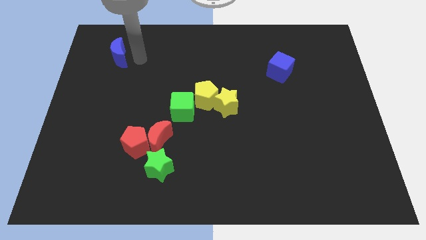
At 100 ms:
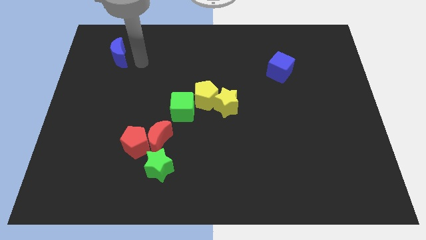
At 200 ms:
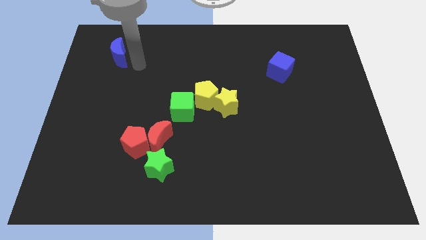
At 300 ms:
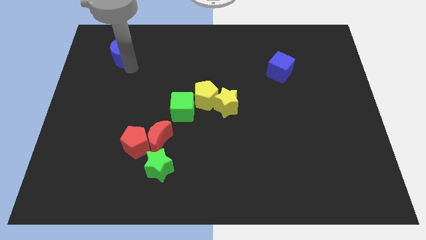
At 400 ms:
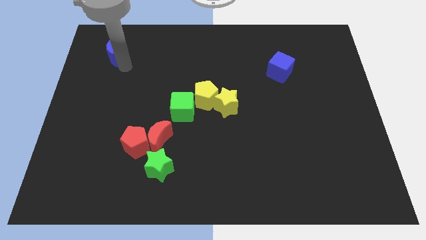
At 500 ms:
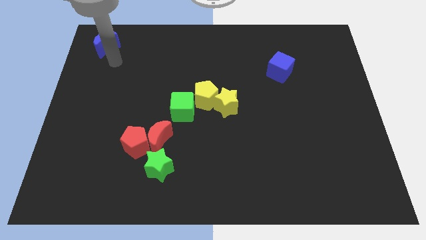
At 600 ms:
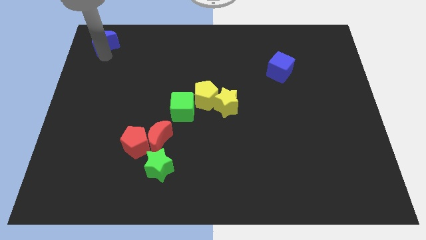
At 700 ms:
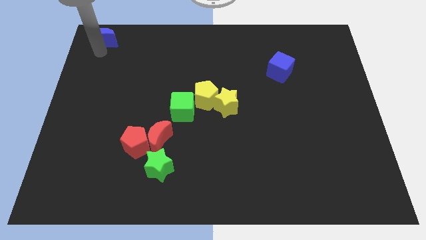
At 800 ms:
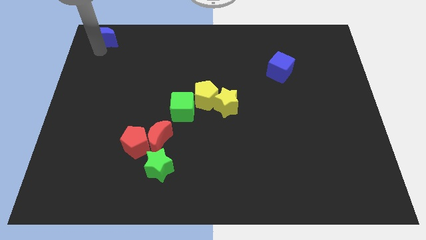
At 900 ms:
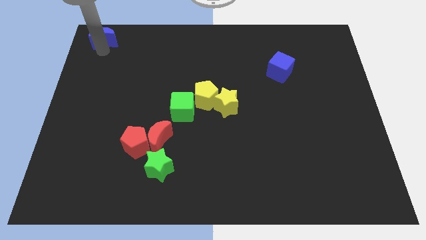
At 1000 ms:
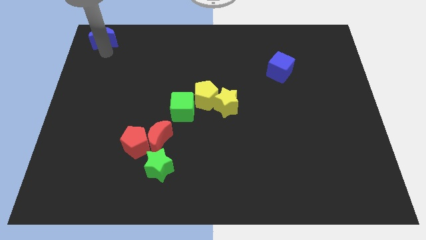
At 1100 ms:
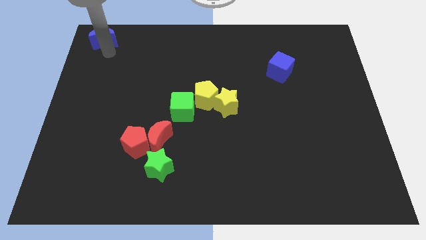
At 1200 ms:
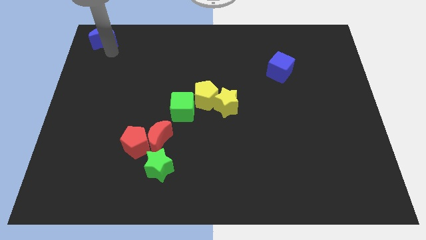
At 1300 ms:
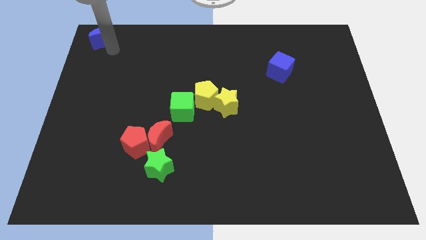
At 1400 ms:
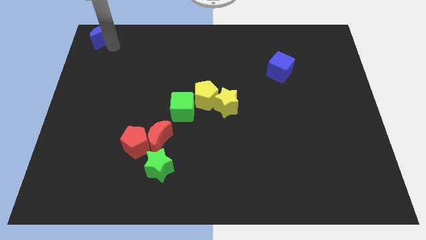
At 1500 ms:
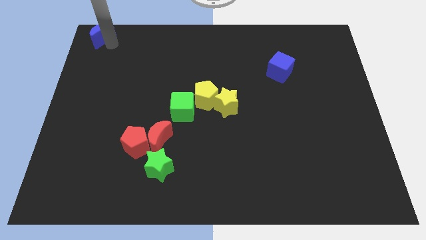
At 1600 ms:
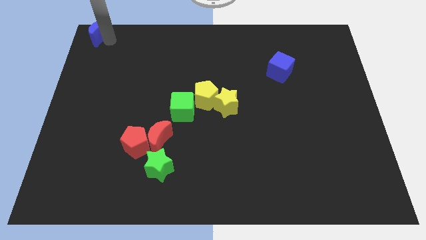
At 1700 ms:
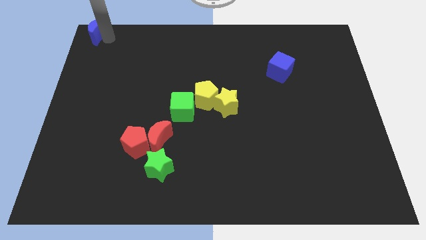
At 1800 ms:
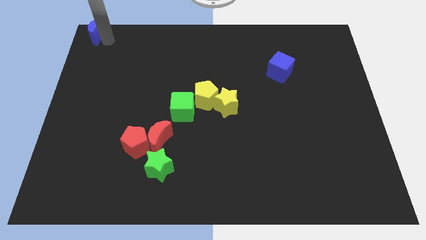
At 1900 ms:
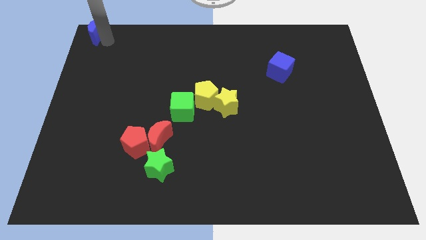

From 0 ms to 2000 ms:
move the blue crescent to the top left corner of the board

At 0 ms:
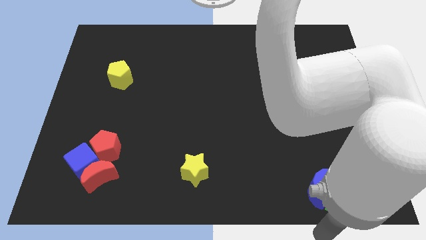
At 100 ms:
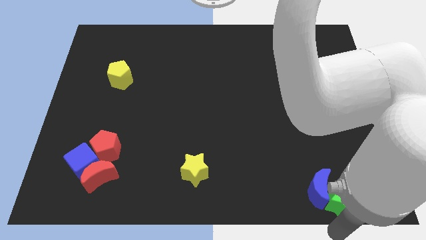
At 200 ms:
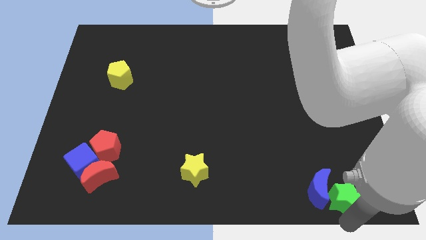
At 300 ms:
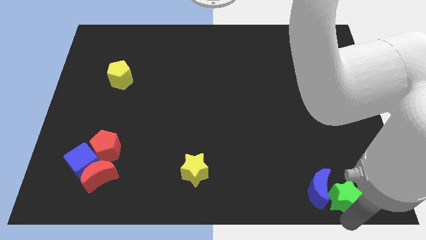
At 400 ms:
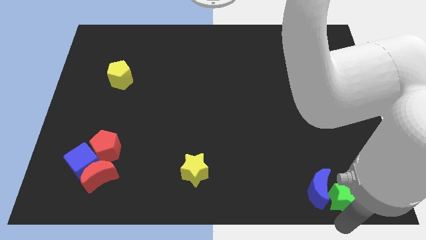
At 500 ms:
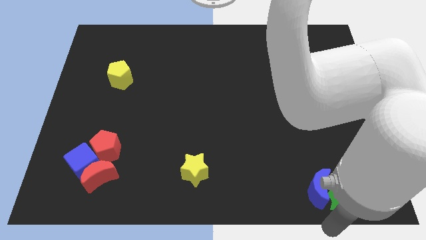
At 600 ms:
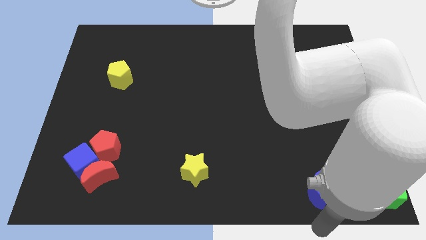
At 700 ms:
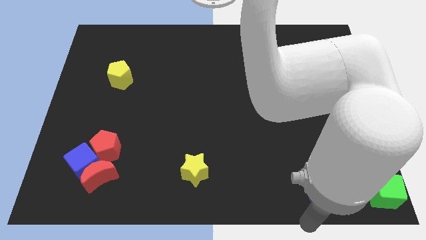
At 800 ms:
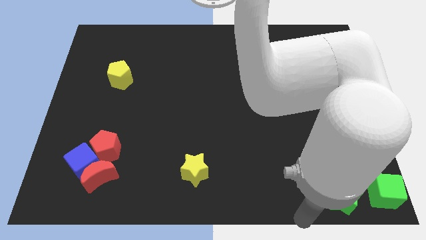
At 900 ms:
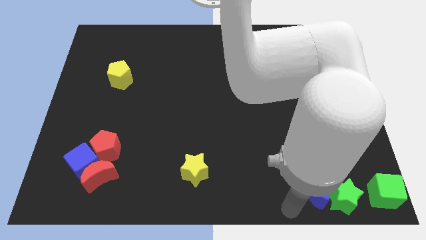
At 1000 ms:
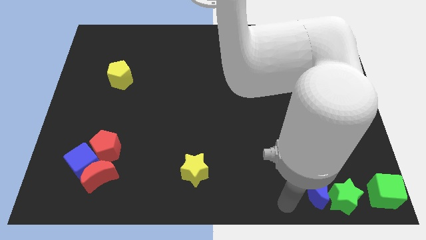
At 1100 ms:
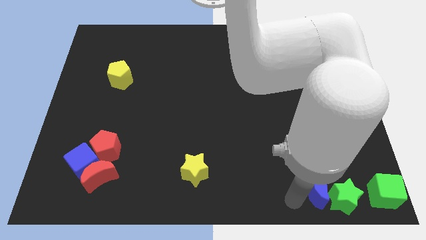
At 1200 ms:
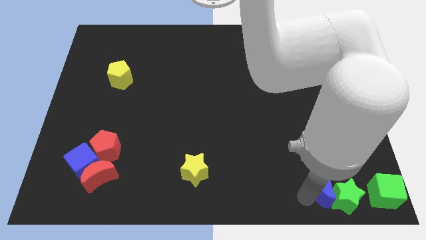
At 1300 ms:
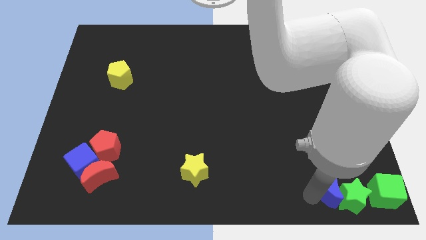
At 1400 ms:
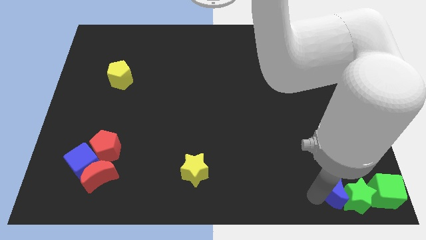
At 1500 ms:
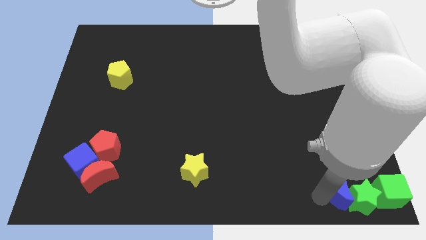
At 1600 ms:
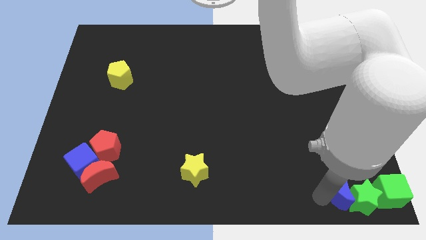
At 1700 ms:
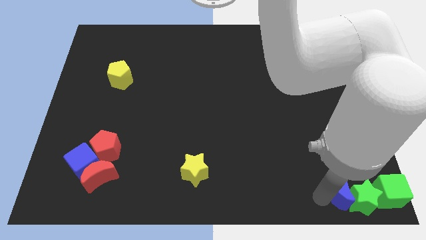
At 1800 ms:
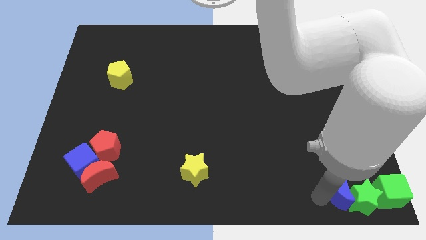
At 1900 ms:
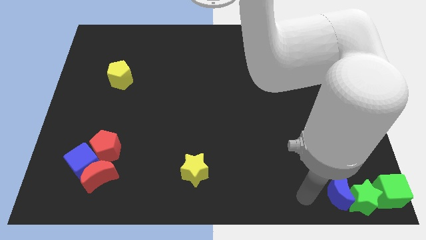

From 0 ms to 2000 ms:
push the blue moon along with the green star into the green cube

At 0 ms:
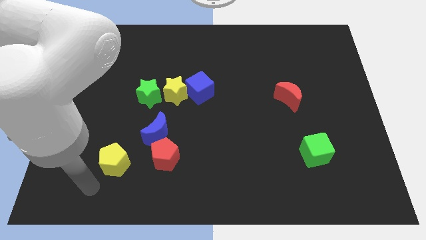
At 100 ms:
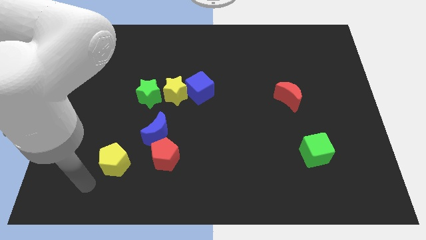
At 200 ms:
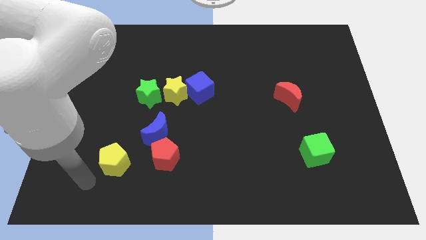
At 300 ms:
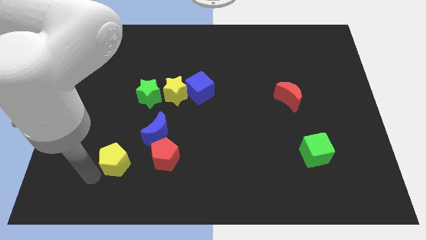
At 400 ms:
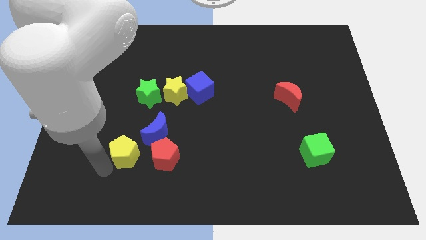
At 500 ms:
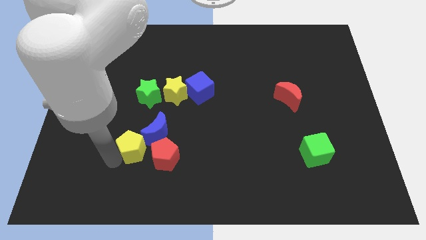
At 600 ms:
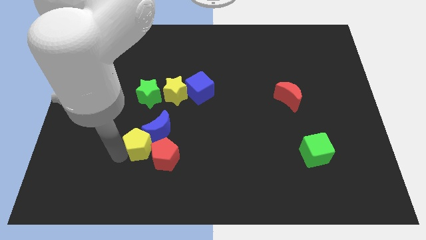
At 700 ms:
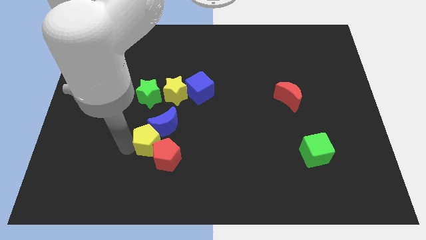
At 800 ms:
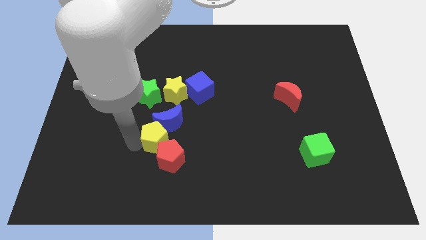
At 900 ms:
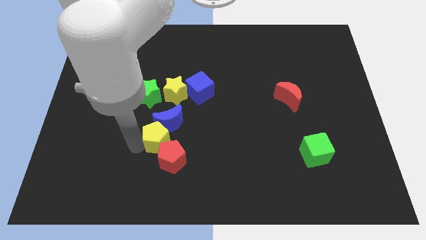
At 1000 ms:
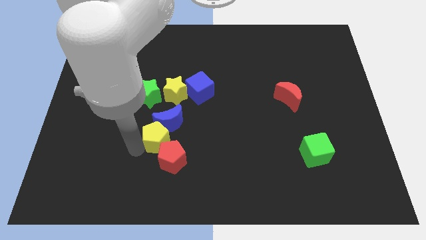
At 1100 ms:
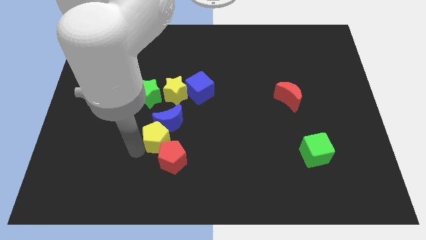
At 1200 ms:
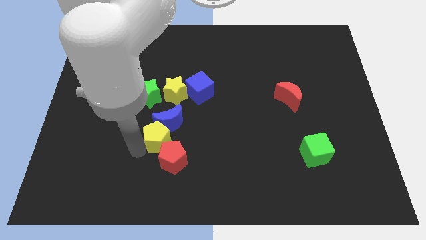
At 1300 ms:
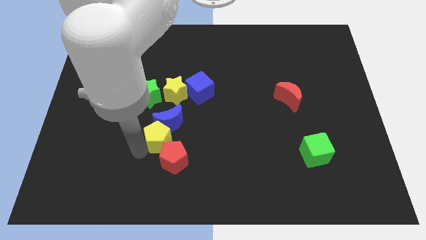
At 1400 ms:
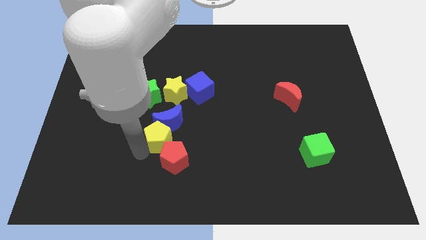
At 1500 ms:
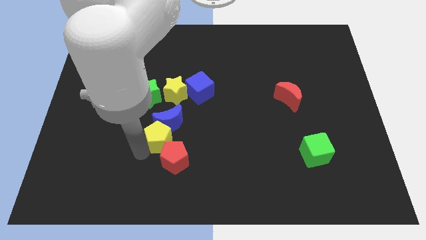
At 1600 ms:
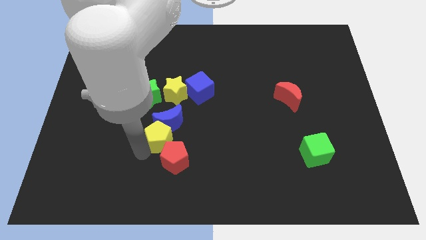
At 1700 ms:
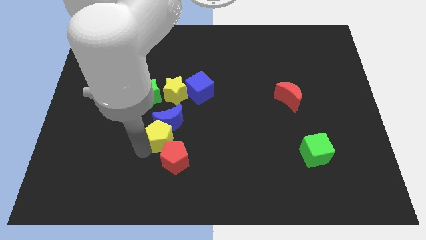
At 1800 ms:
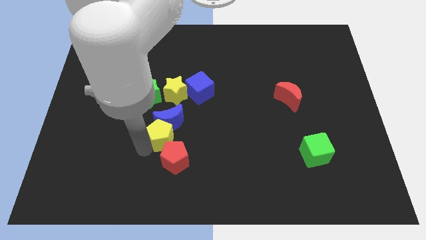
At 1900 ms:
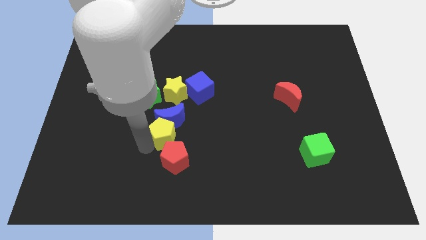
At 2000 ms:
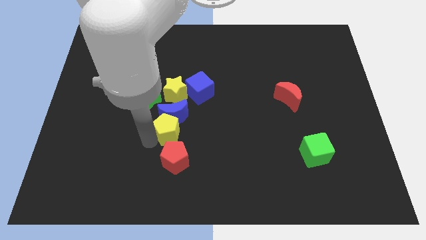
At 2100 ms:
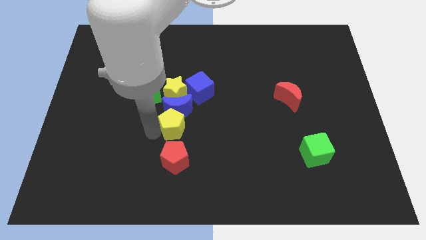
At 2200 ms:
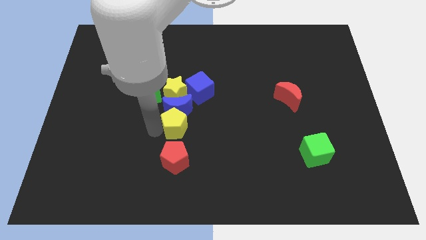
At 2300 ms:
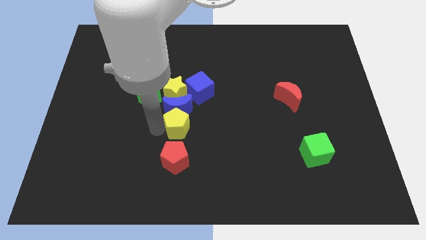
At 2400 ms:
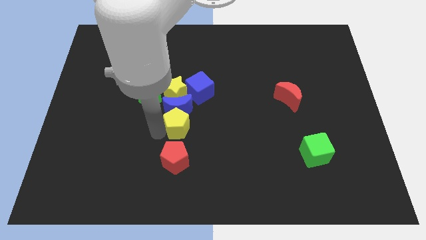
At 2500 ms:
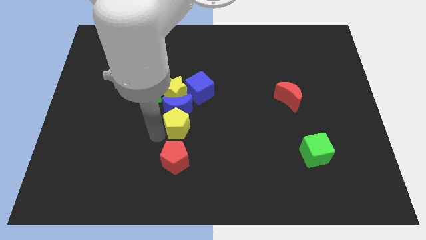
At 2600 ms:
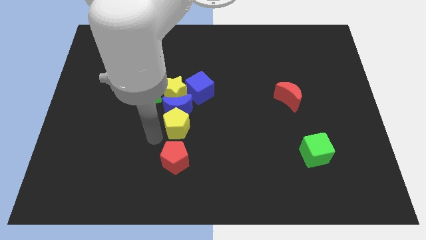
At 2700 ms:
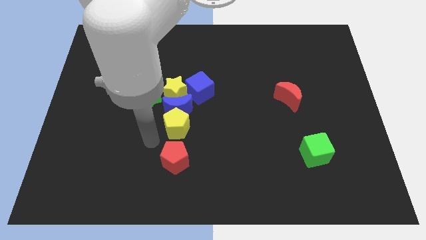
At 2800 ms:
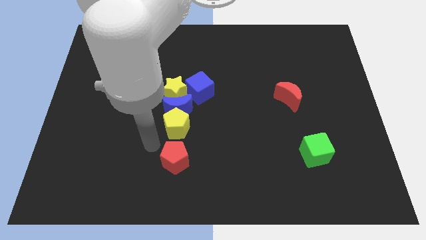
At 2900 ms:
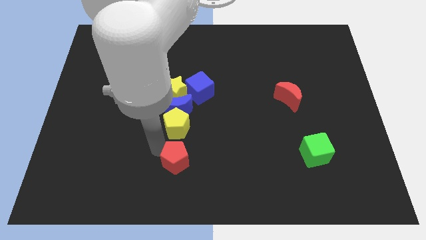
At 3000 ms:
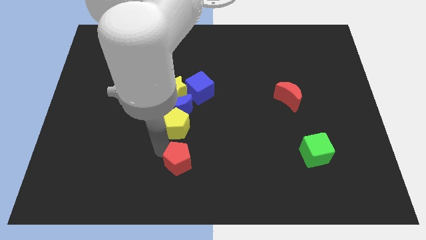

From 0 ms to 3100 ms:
move red pentagon in between of blue moon red pentagon

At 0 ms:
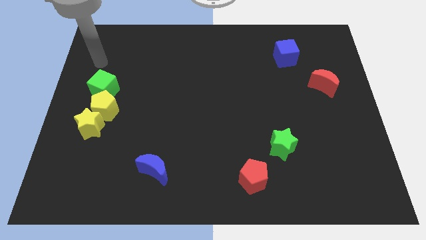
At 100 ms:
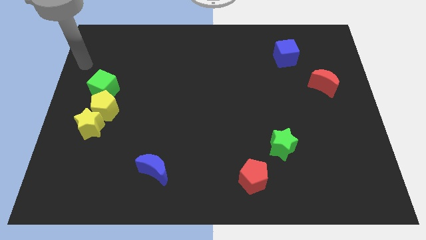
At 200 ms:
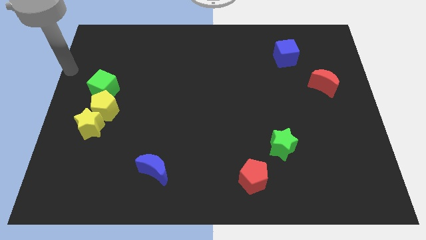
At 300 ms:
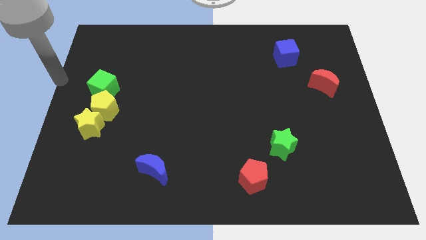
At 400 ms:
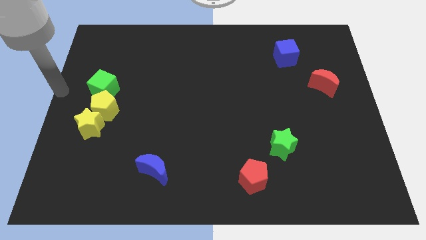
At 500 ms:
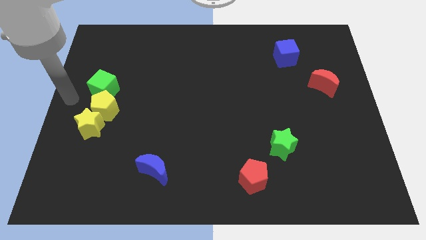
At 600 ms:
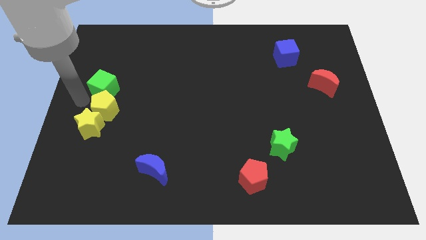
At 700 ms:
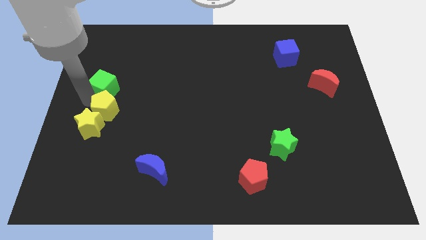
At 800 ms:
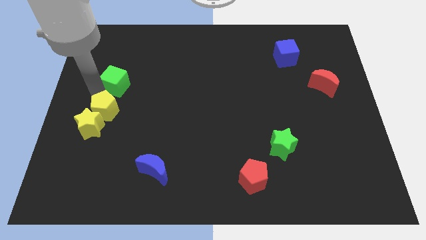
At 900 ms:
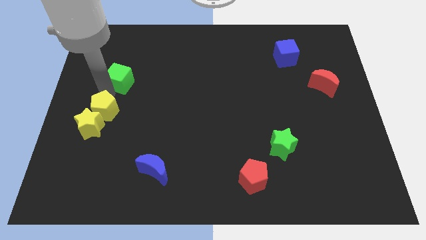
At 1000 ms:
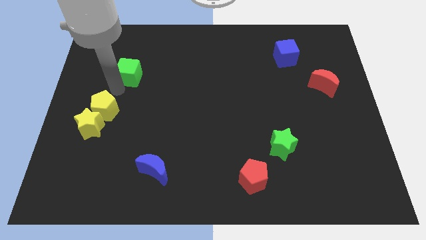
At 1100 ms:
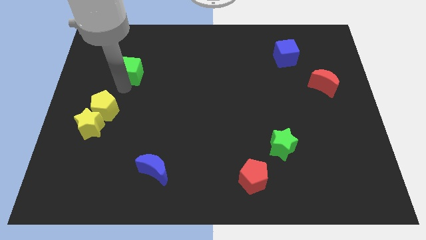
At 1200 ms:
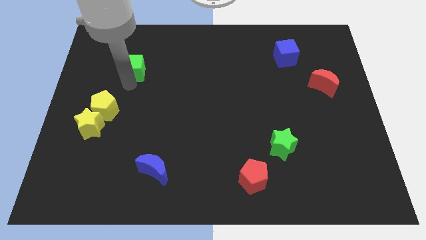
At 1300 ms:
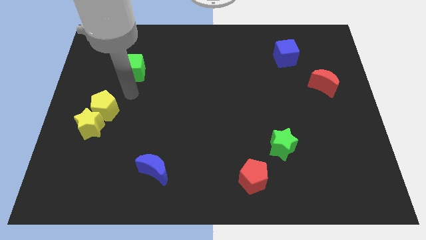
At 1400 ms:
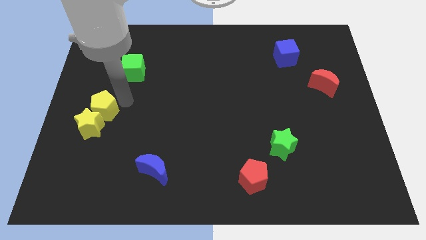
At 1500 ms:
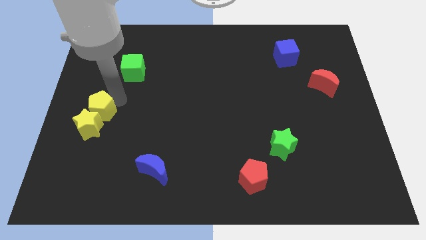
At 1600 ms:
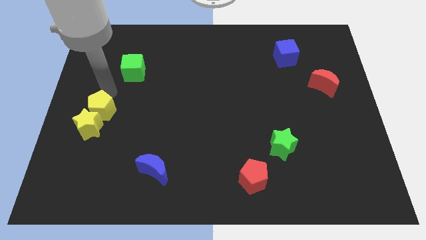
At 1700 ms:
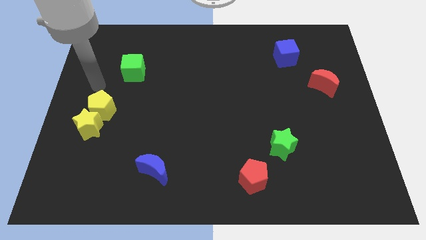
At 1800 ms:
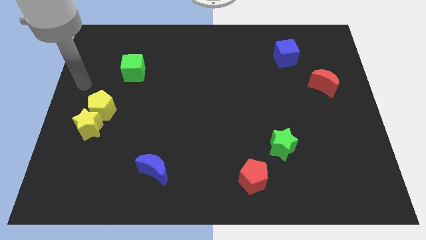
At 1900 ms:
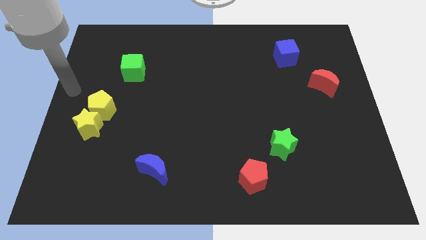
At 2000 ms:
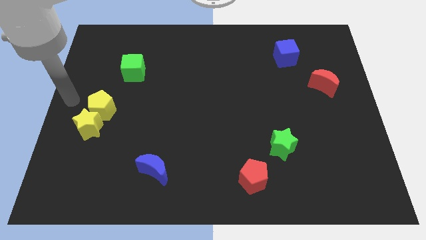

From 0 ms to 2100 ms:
push the green cube up slightly
